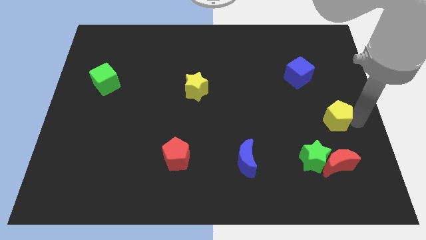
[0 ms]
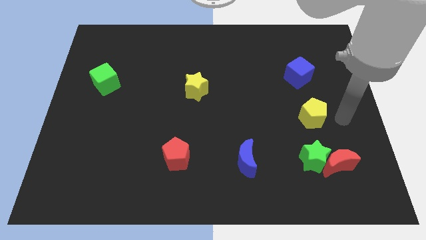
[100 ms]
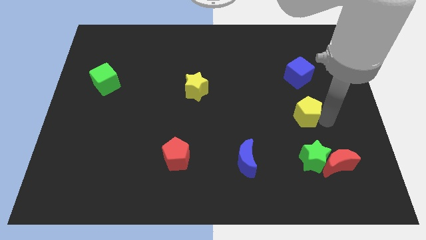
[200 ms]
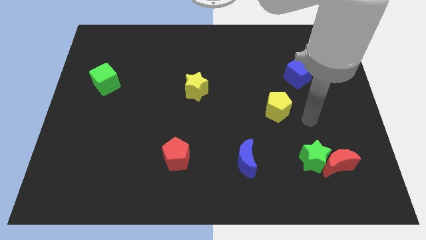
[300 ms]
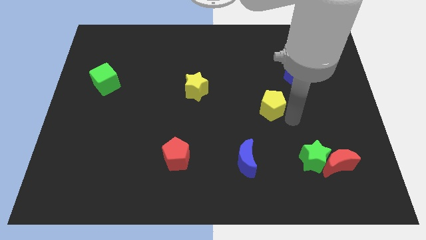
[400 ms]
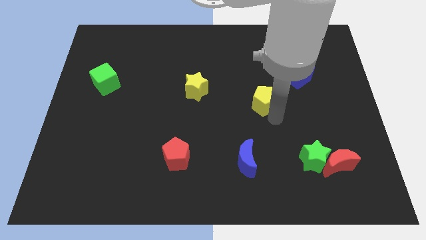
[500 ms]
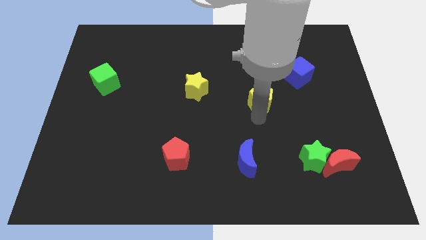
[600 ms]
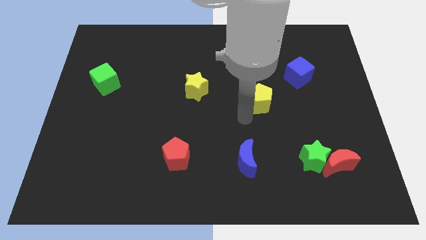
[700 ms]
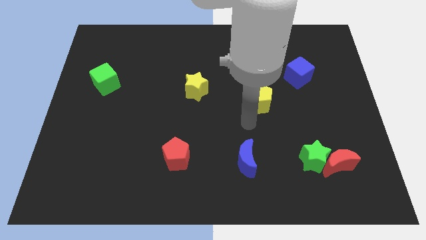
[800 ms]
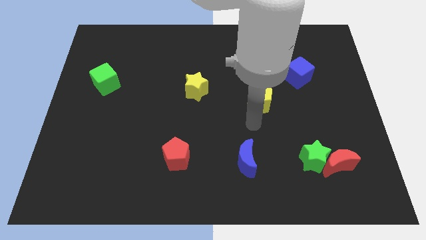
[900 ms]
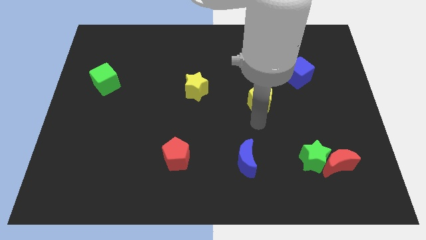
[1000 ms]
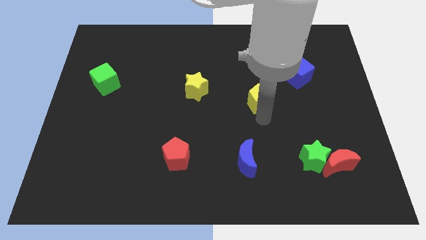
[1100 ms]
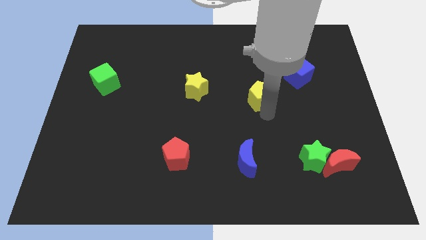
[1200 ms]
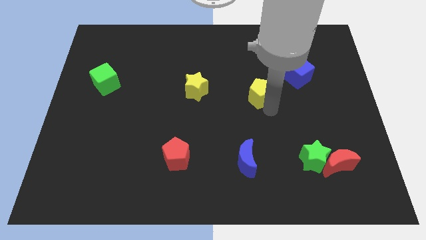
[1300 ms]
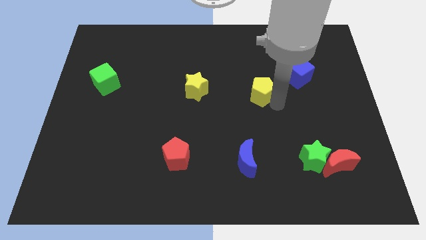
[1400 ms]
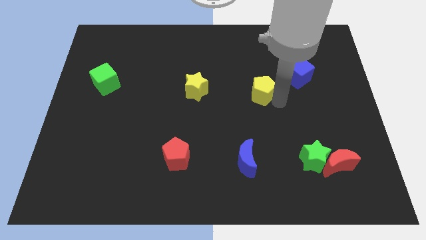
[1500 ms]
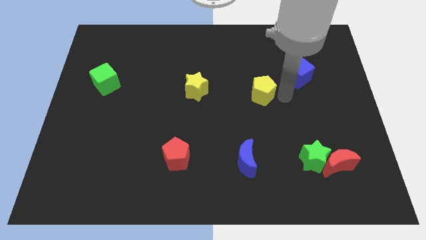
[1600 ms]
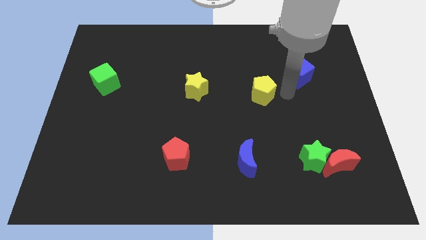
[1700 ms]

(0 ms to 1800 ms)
place the yellow pentagon to the top of blue crescent

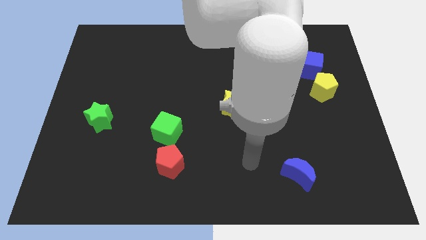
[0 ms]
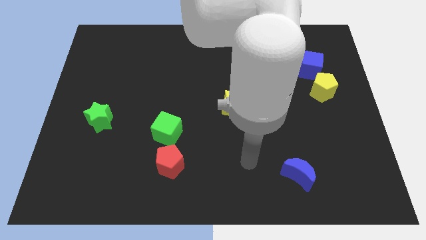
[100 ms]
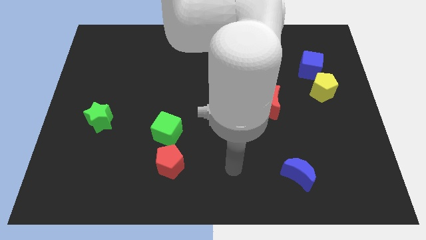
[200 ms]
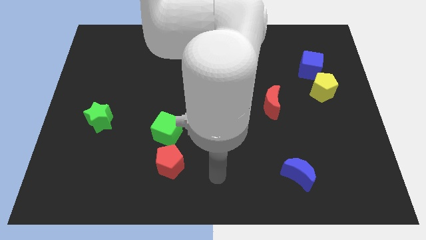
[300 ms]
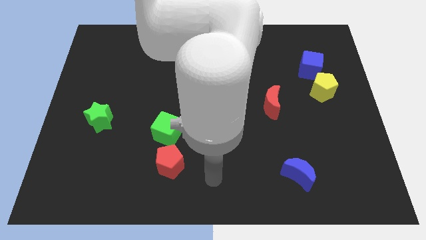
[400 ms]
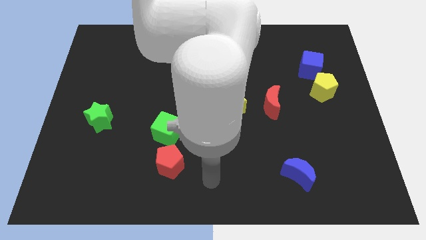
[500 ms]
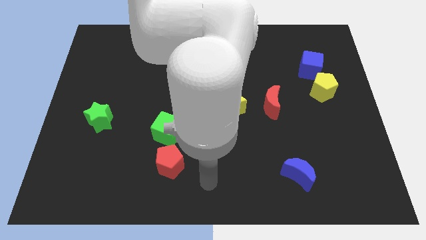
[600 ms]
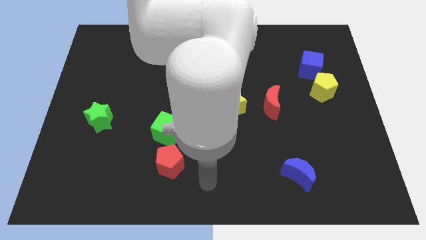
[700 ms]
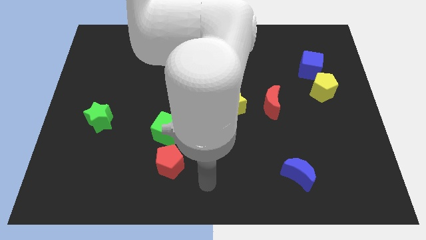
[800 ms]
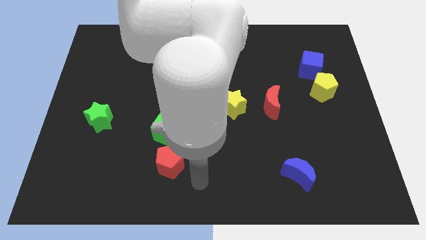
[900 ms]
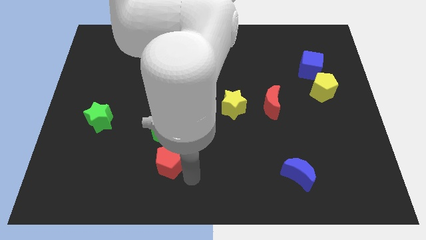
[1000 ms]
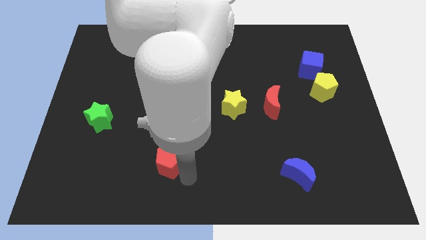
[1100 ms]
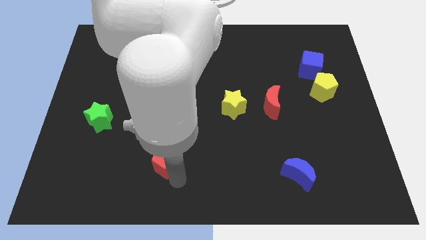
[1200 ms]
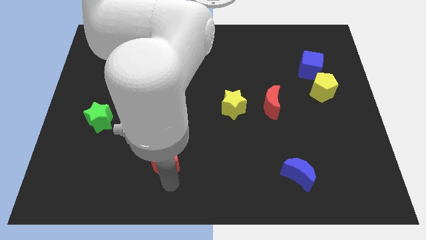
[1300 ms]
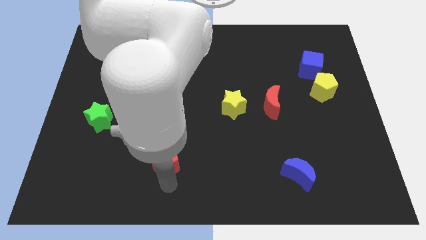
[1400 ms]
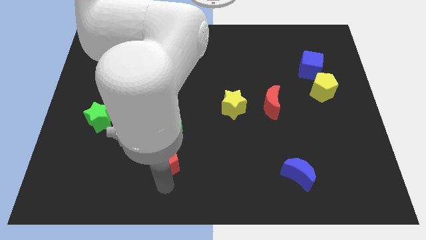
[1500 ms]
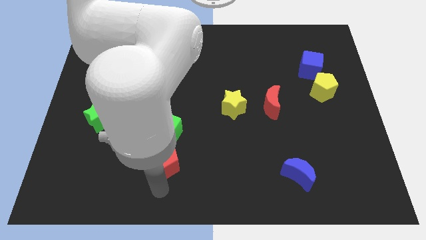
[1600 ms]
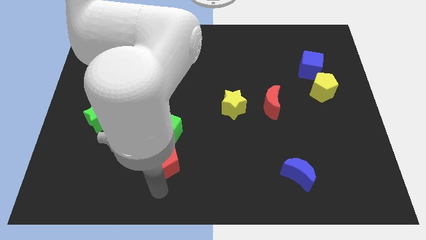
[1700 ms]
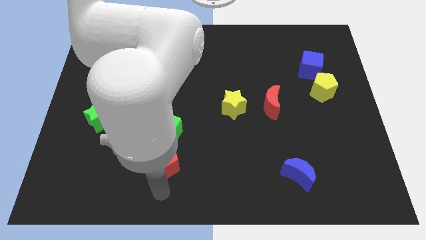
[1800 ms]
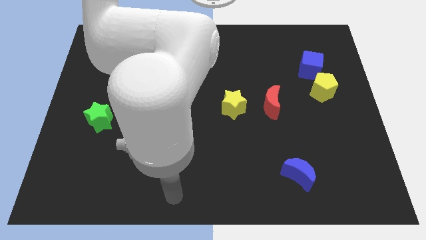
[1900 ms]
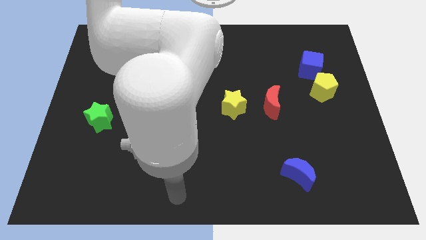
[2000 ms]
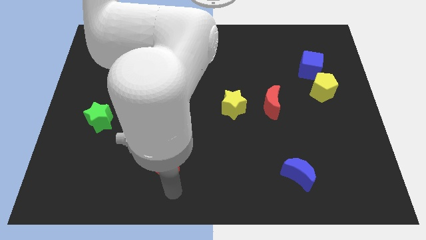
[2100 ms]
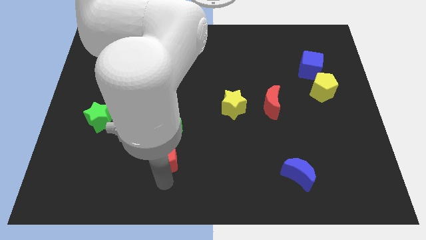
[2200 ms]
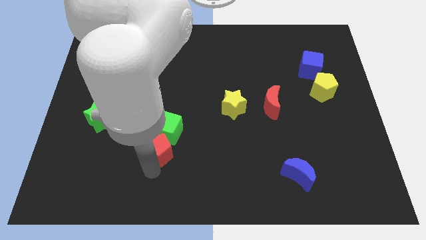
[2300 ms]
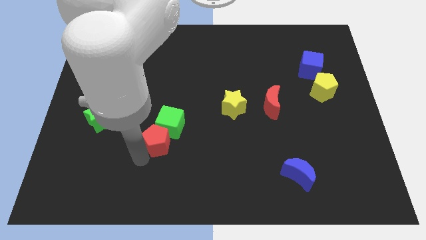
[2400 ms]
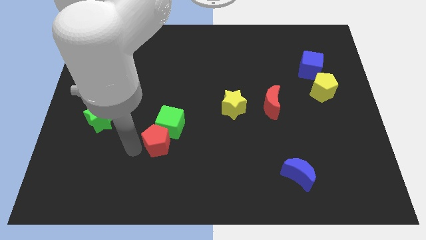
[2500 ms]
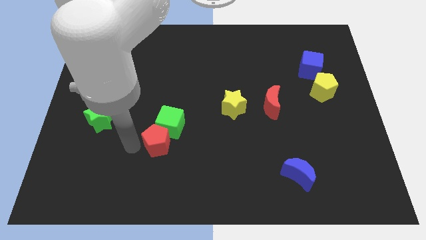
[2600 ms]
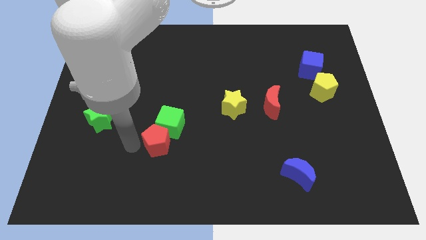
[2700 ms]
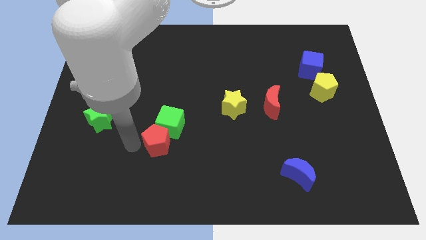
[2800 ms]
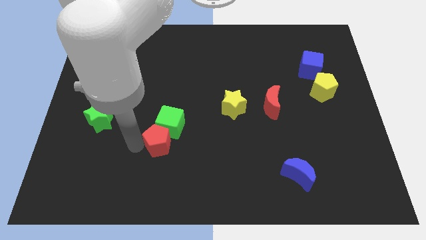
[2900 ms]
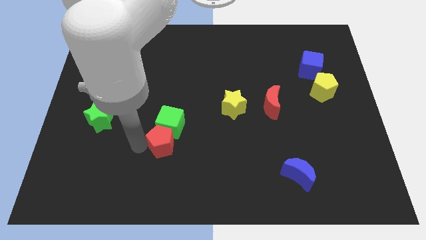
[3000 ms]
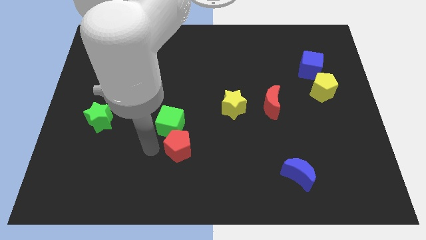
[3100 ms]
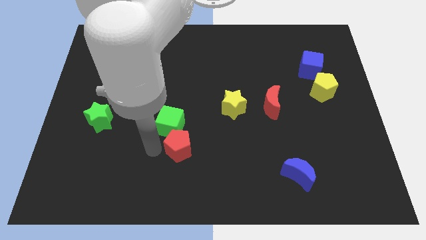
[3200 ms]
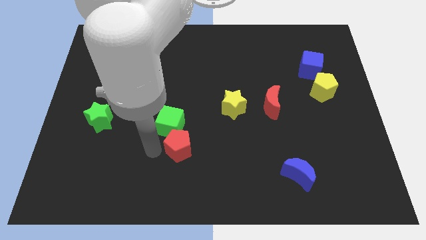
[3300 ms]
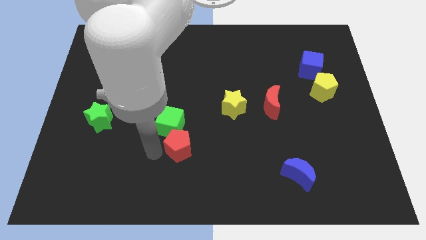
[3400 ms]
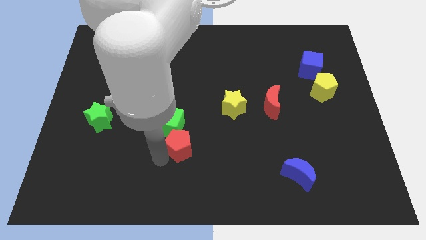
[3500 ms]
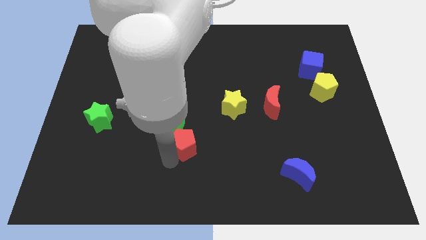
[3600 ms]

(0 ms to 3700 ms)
push the red pentagon slightly to the center

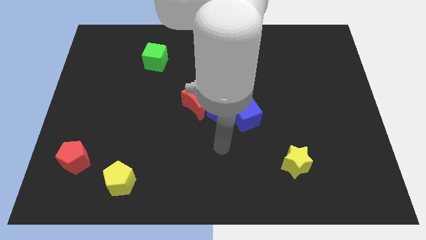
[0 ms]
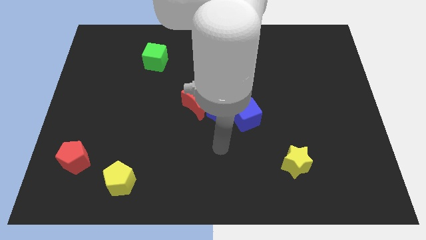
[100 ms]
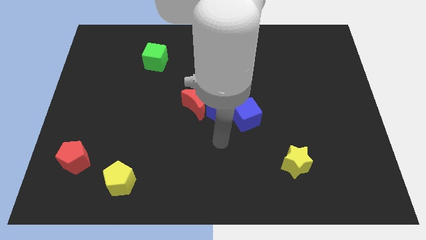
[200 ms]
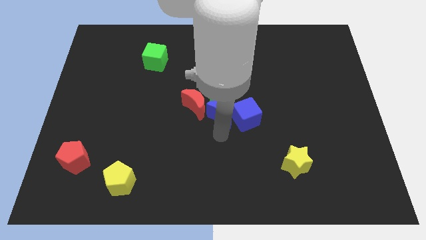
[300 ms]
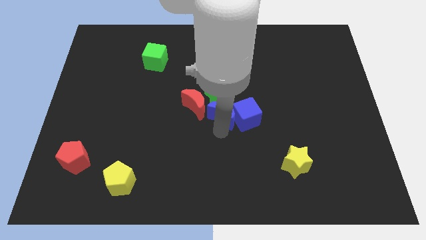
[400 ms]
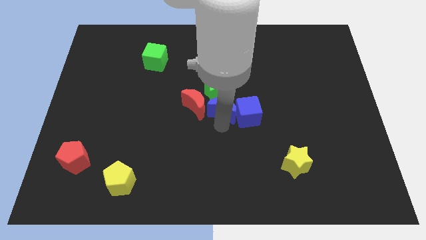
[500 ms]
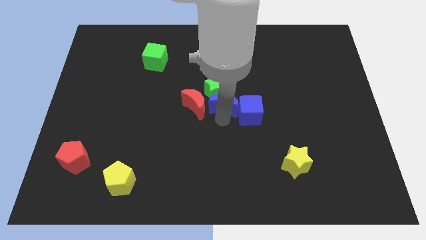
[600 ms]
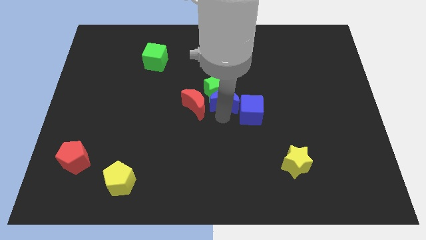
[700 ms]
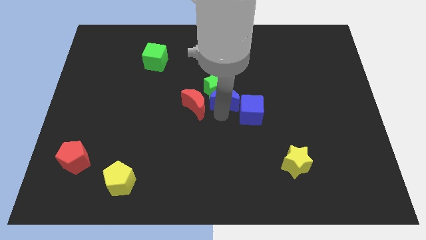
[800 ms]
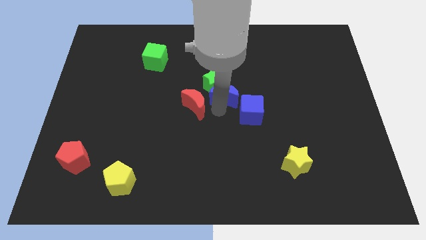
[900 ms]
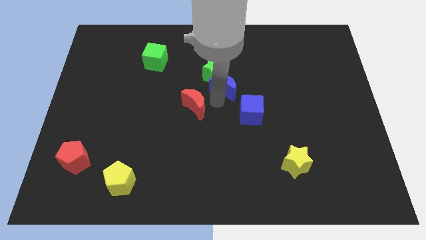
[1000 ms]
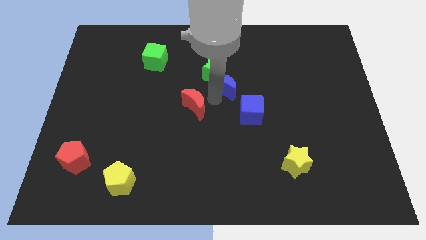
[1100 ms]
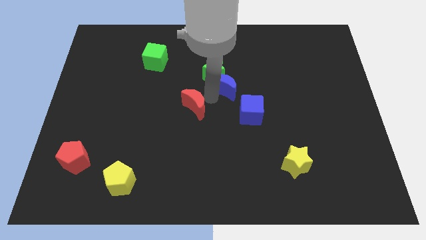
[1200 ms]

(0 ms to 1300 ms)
push the green star with the blue crescent slightly upwards

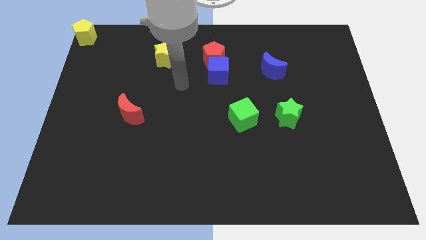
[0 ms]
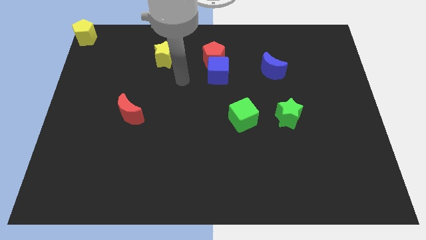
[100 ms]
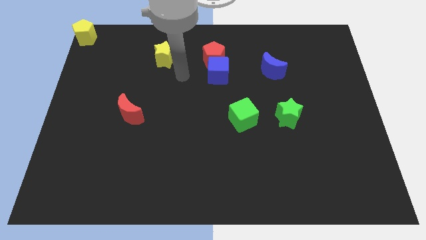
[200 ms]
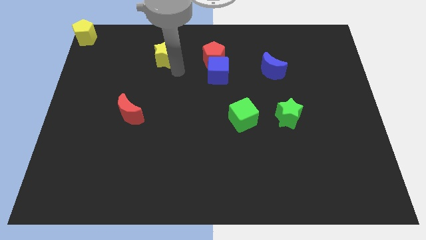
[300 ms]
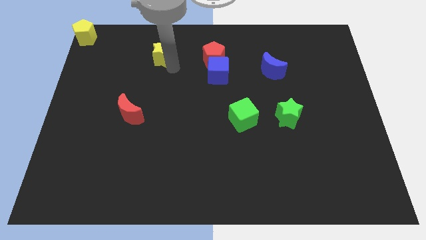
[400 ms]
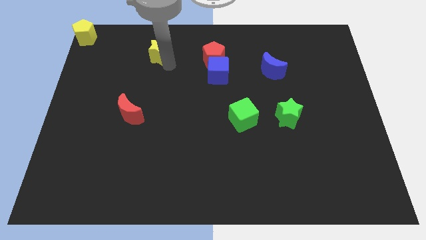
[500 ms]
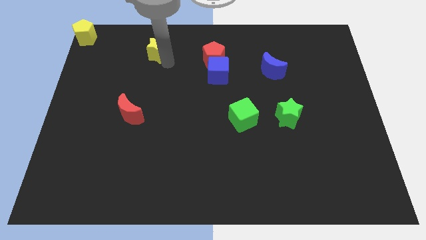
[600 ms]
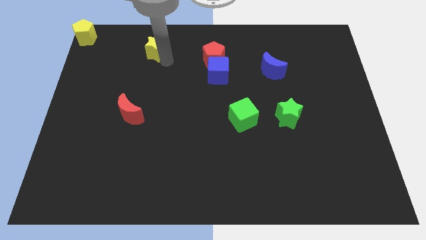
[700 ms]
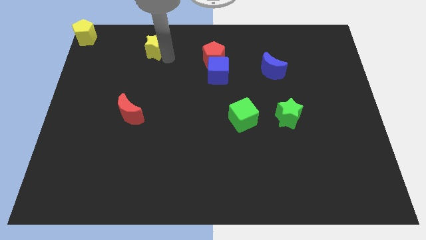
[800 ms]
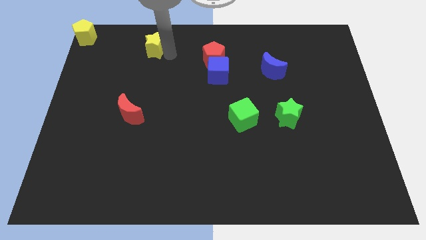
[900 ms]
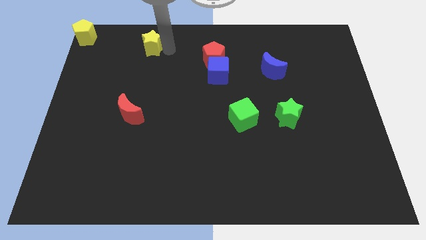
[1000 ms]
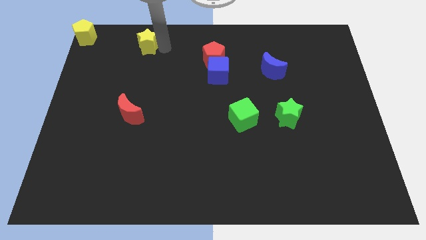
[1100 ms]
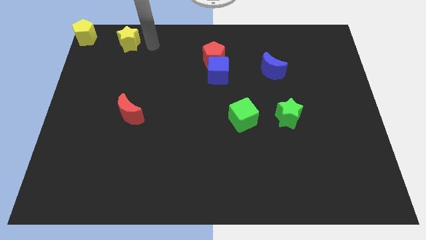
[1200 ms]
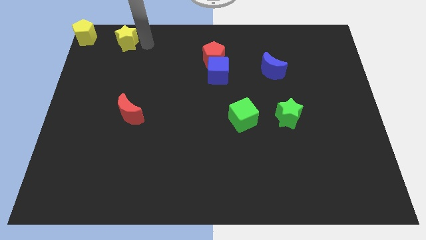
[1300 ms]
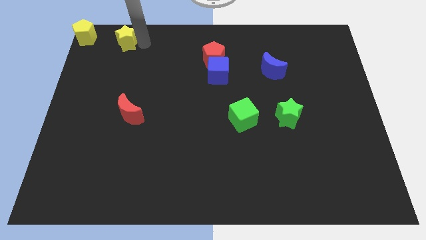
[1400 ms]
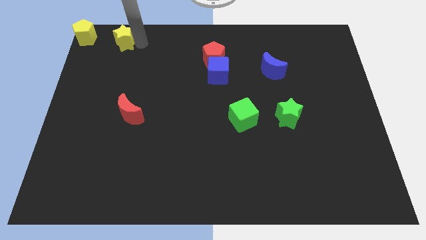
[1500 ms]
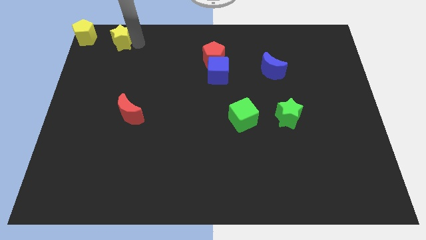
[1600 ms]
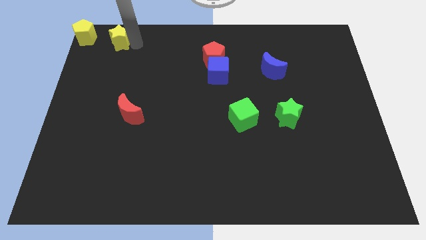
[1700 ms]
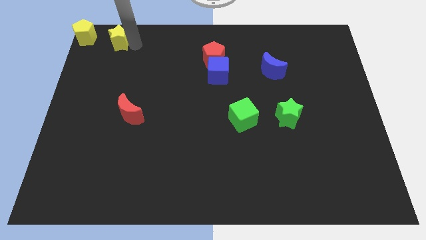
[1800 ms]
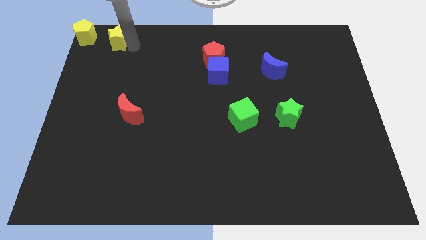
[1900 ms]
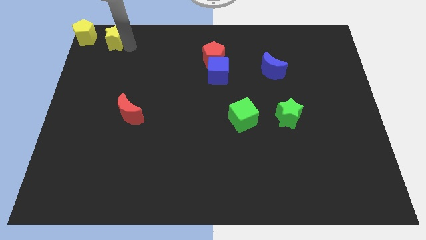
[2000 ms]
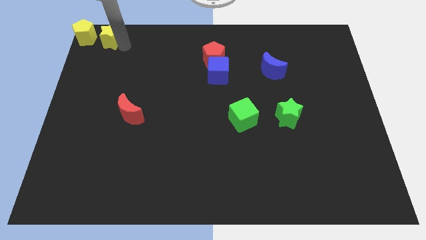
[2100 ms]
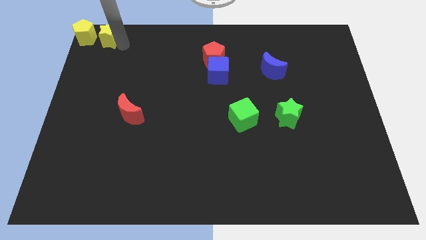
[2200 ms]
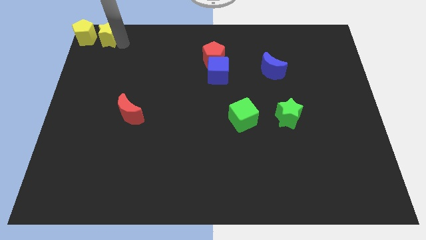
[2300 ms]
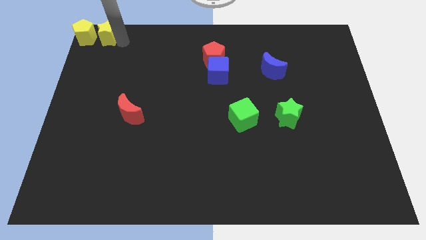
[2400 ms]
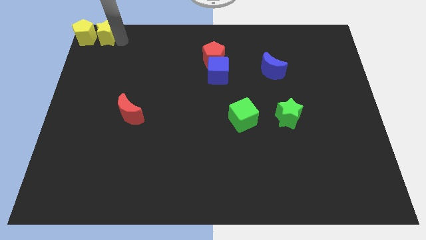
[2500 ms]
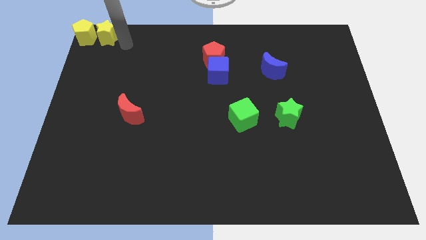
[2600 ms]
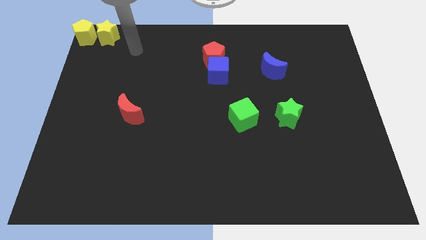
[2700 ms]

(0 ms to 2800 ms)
push the yellow star to the right side of the yellow pentagon
